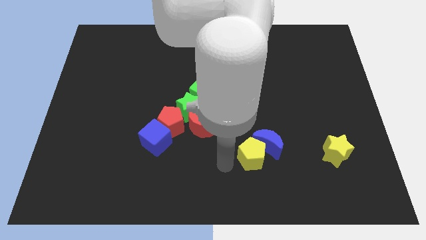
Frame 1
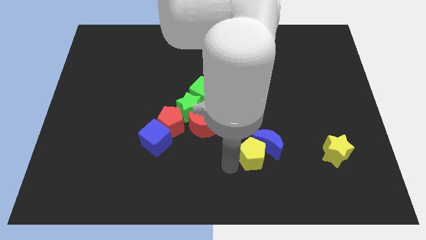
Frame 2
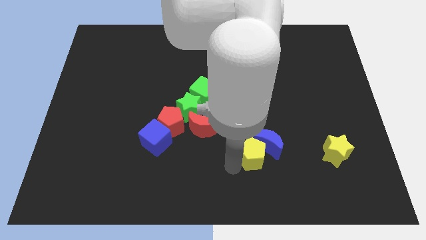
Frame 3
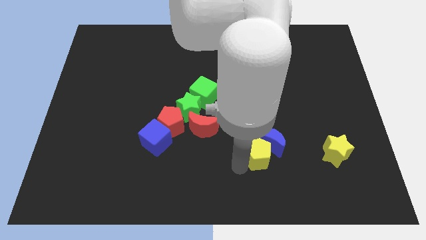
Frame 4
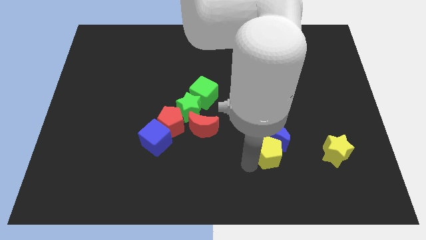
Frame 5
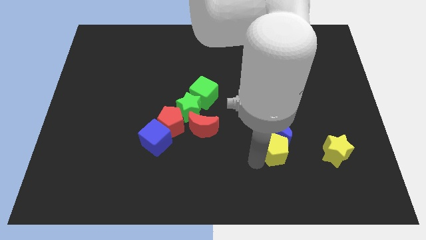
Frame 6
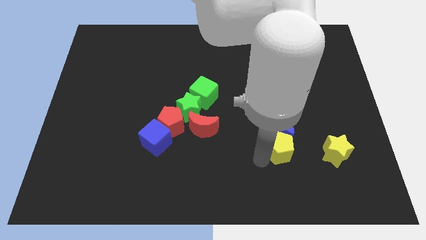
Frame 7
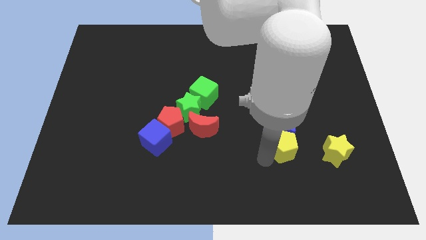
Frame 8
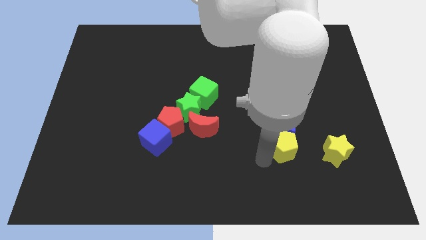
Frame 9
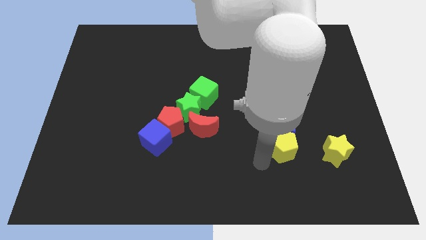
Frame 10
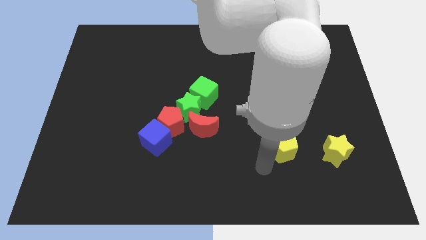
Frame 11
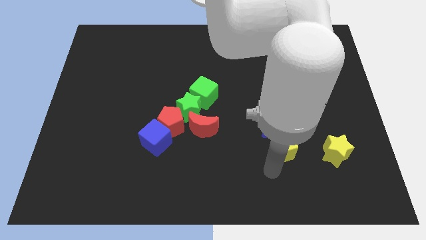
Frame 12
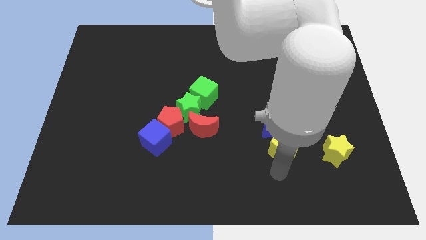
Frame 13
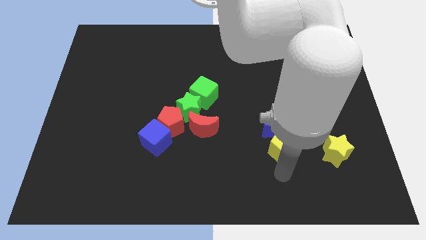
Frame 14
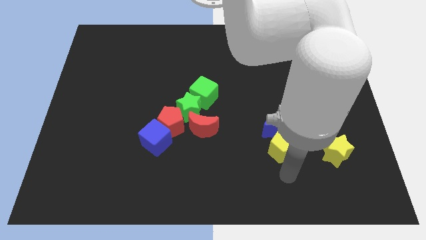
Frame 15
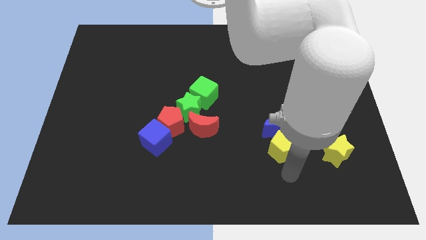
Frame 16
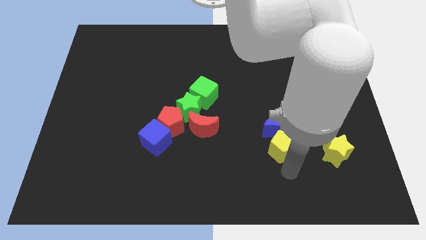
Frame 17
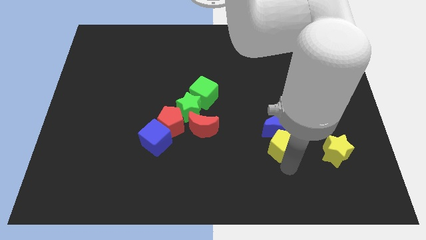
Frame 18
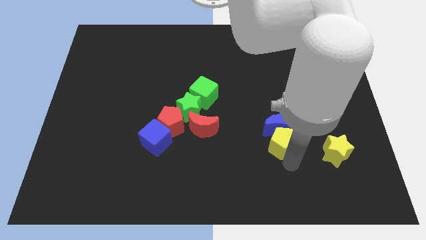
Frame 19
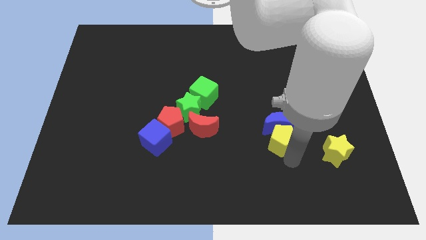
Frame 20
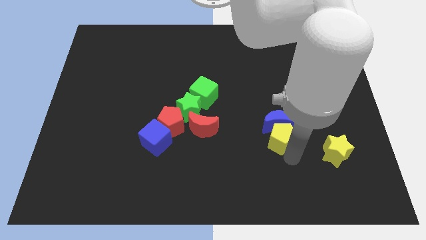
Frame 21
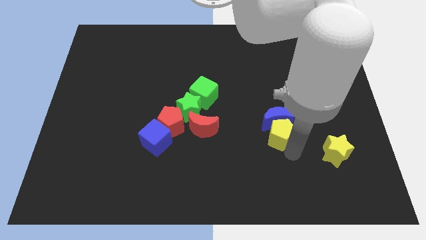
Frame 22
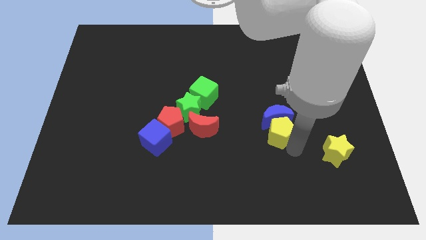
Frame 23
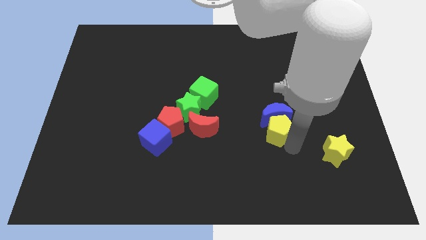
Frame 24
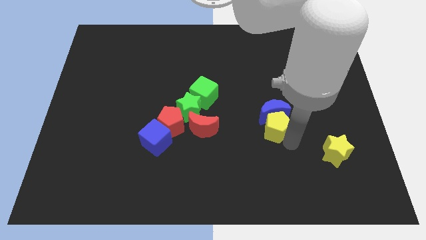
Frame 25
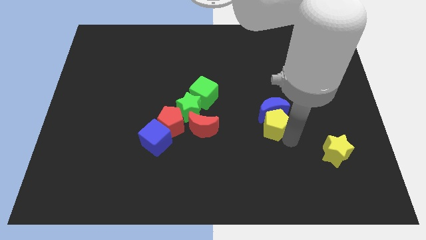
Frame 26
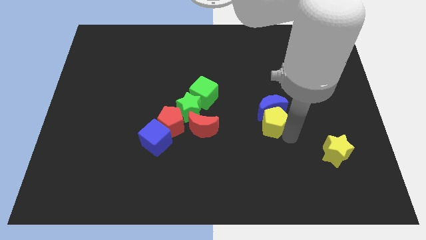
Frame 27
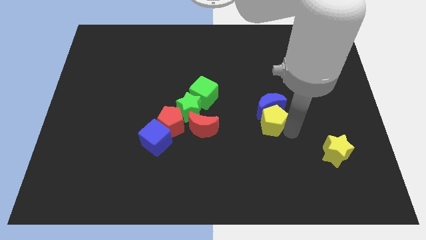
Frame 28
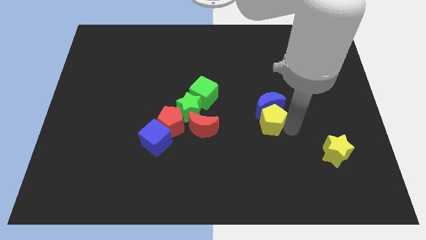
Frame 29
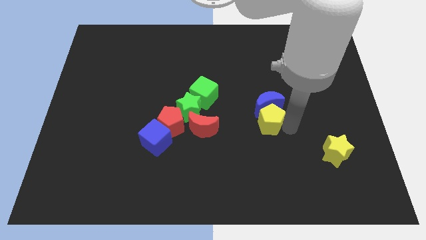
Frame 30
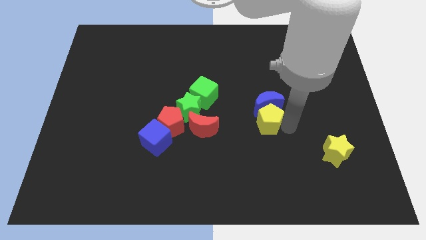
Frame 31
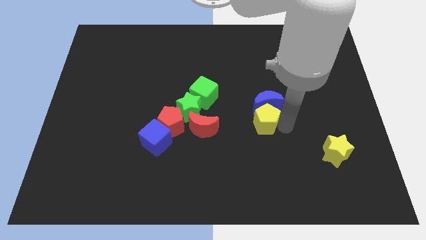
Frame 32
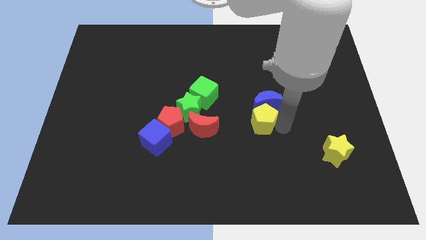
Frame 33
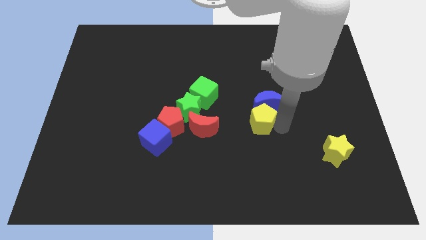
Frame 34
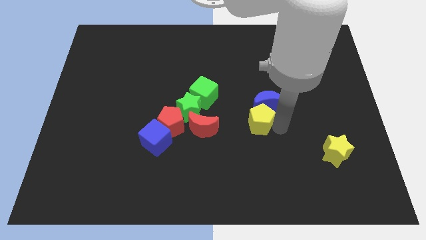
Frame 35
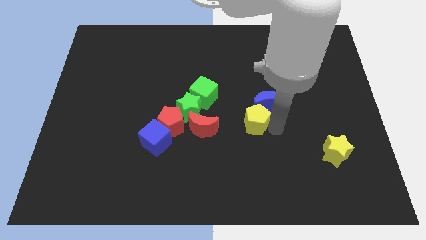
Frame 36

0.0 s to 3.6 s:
push the yellow pentagon and blue crescent towards the top

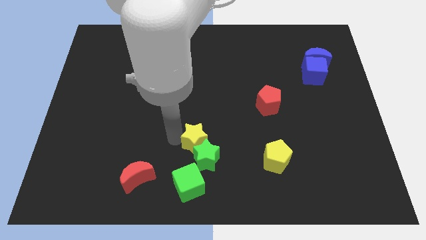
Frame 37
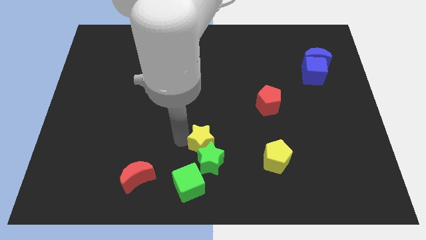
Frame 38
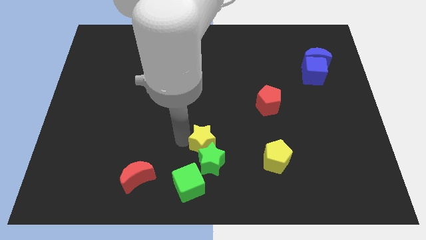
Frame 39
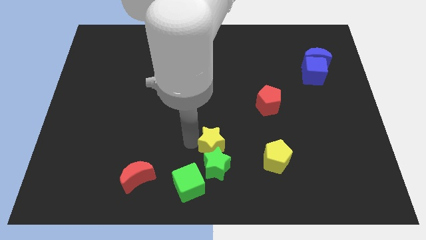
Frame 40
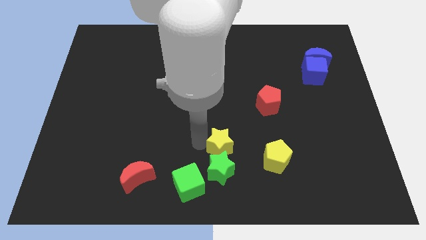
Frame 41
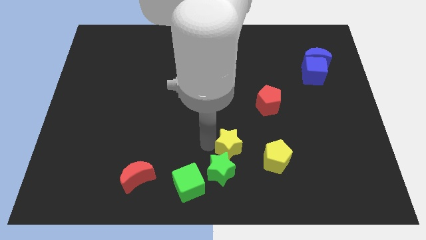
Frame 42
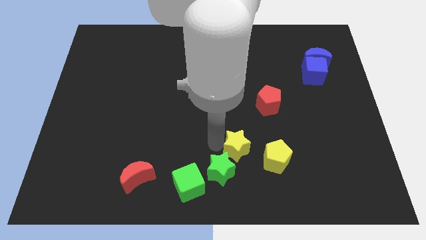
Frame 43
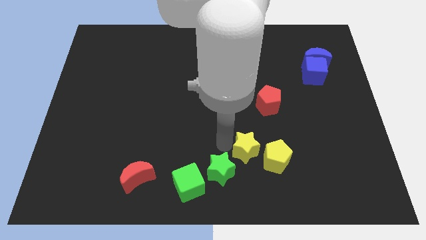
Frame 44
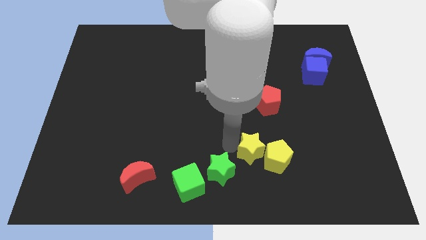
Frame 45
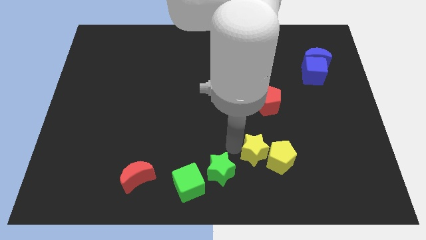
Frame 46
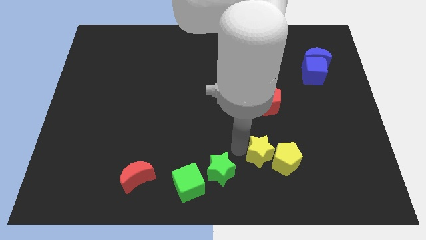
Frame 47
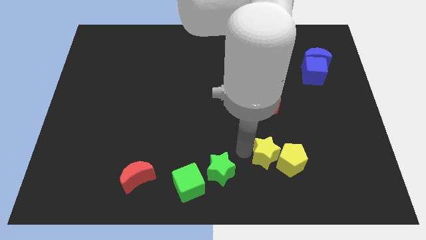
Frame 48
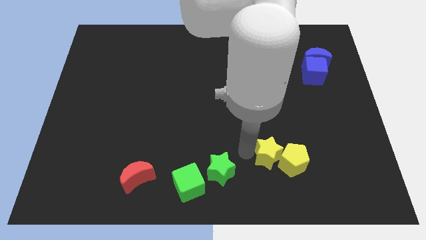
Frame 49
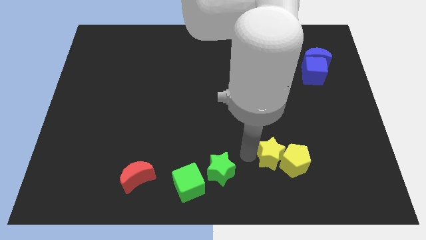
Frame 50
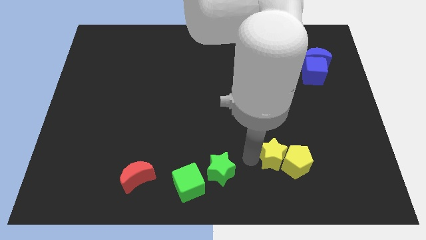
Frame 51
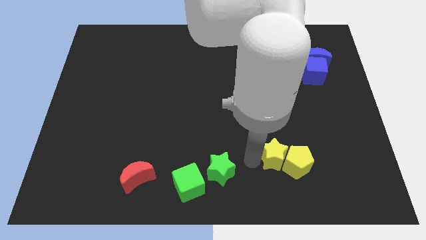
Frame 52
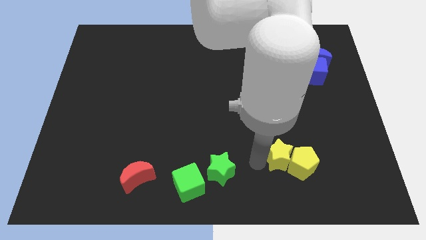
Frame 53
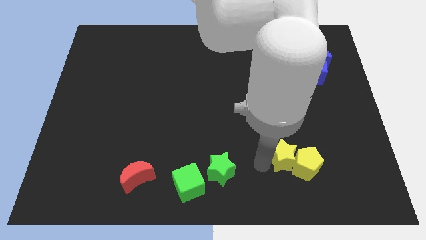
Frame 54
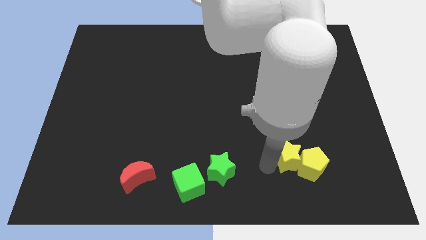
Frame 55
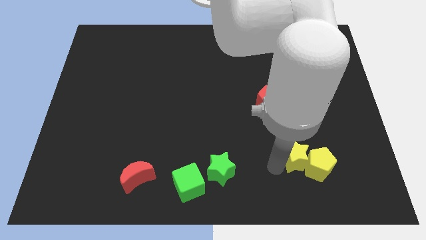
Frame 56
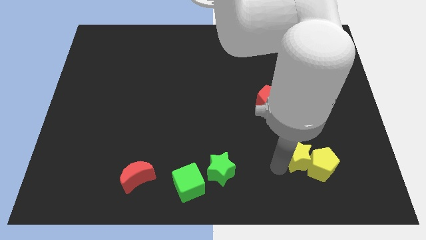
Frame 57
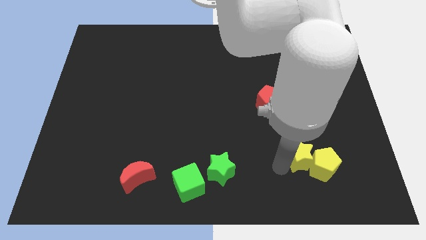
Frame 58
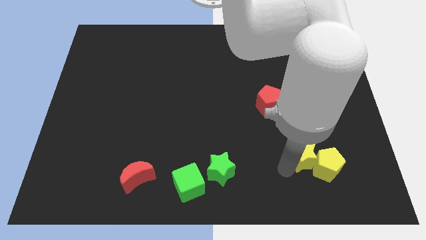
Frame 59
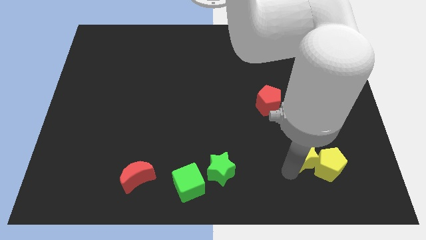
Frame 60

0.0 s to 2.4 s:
push the yellow star to the left side of yellow pentagon

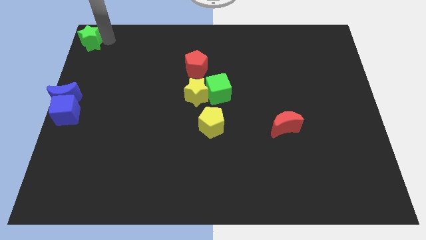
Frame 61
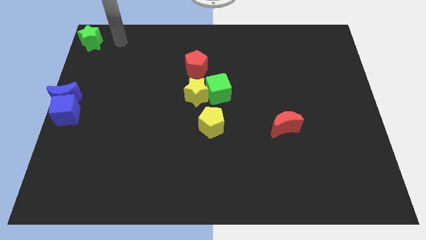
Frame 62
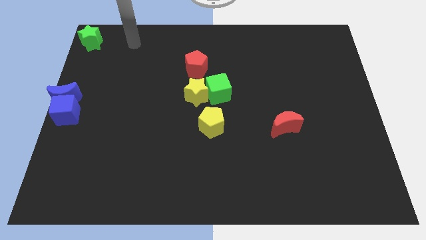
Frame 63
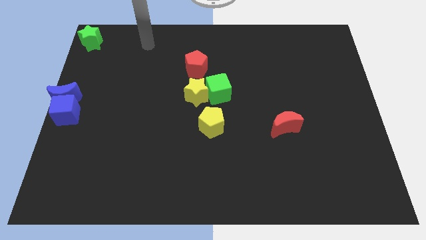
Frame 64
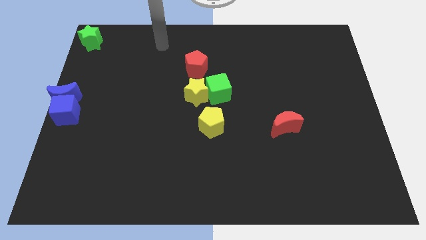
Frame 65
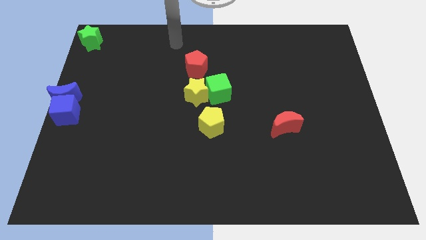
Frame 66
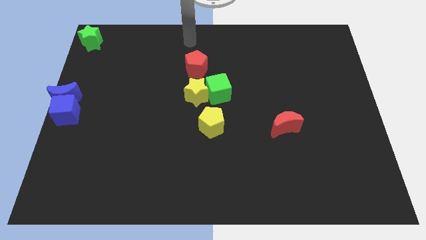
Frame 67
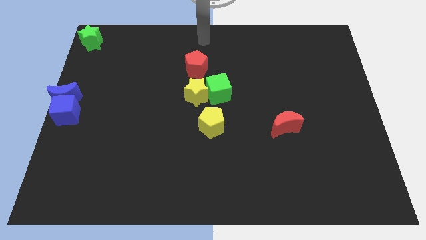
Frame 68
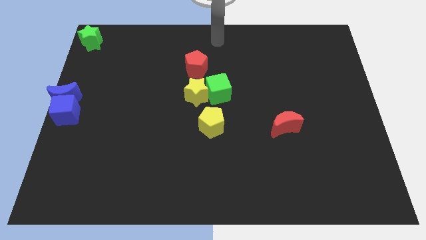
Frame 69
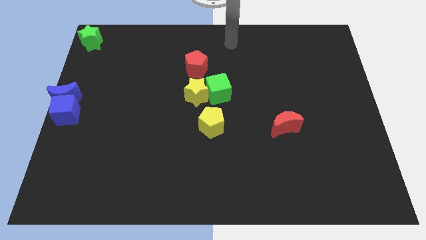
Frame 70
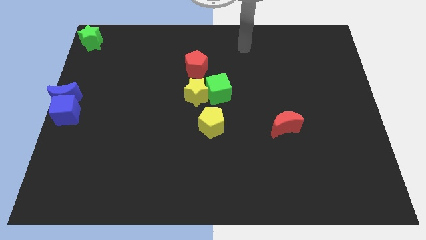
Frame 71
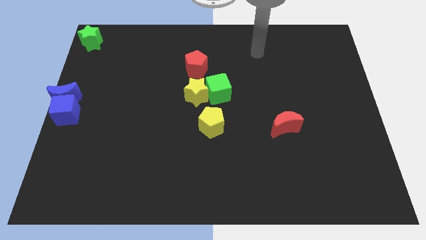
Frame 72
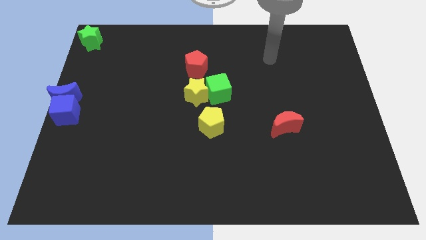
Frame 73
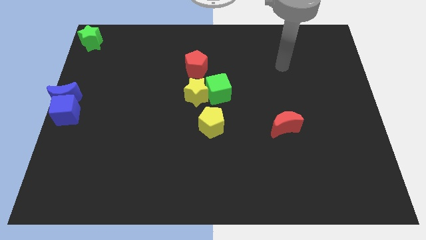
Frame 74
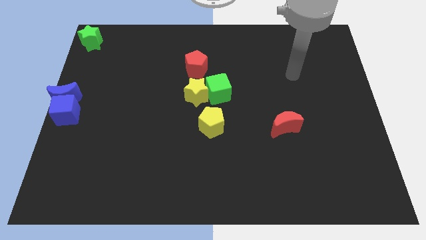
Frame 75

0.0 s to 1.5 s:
move the arm away from the green star

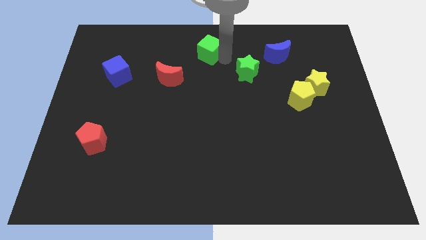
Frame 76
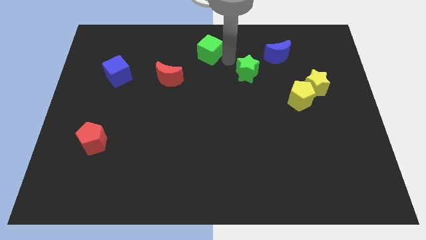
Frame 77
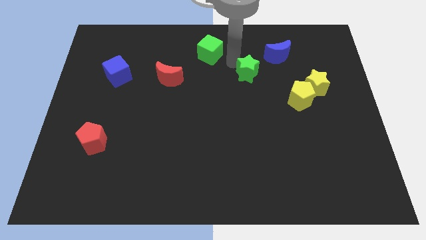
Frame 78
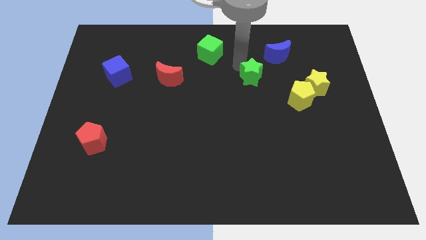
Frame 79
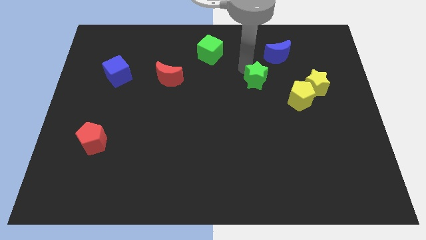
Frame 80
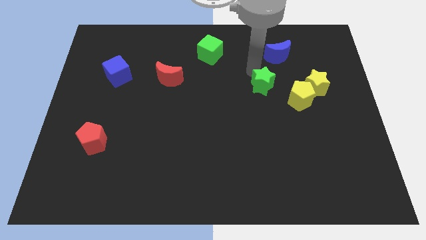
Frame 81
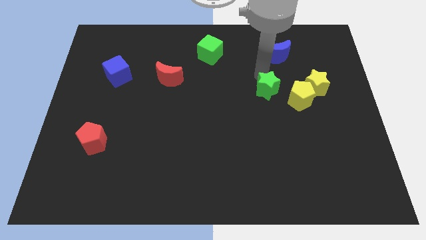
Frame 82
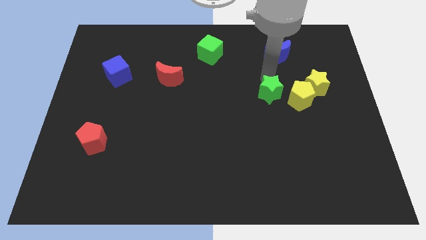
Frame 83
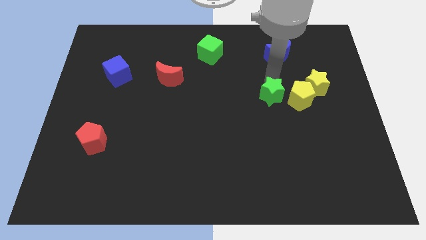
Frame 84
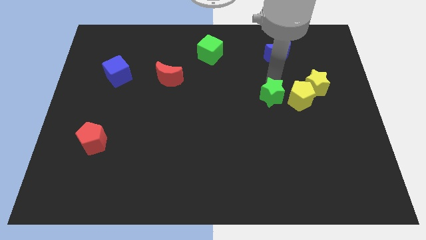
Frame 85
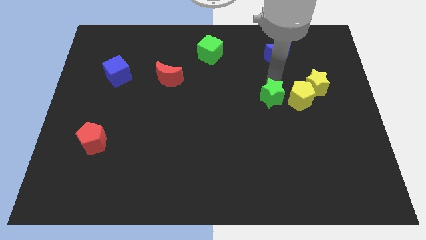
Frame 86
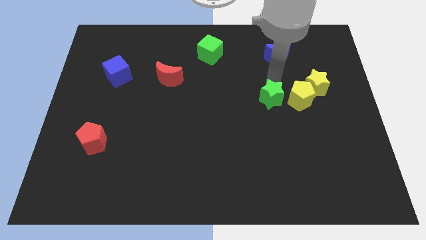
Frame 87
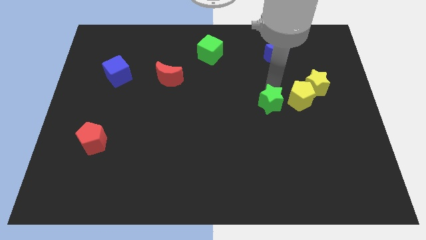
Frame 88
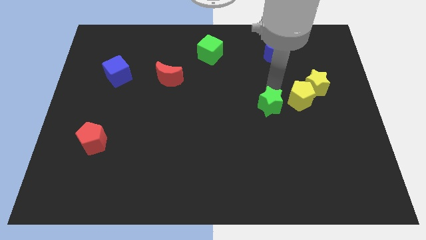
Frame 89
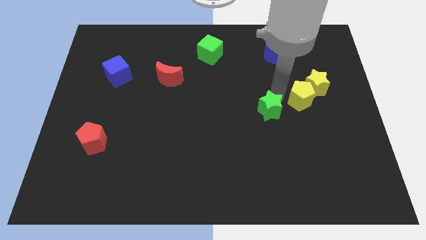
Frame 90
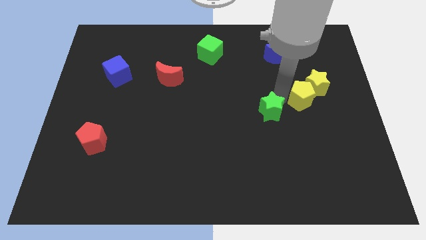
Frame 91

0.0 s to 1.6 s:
move the green star towards the bottom
